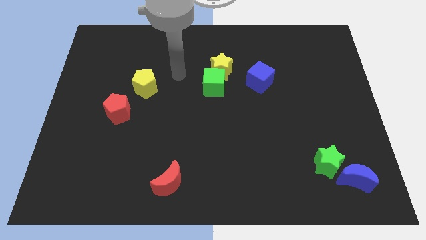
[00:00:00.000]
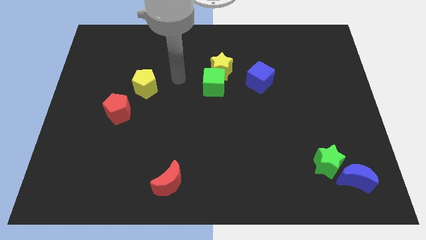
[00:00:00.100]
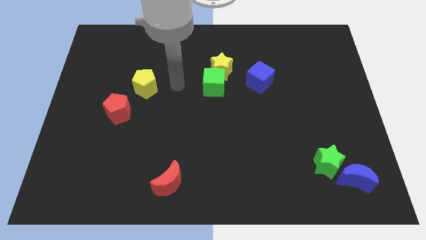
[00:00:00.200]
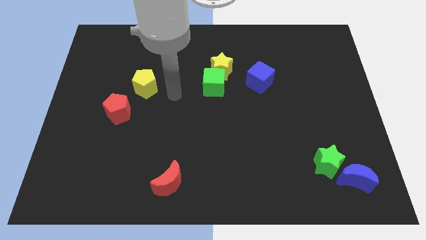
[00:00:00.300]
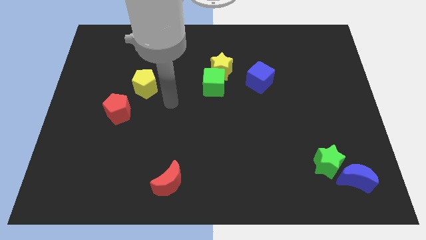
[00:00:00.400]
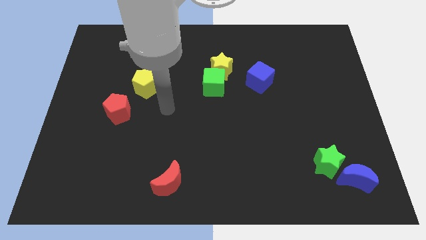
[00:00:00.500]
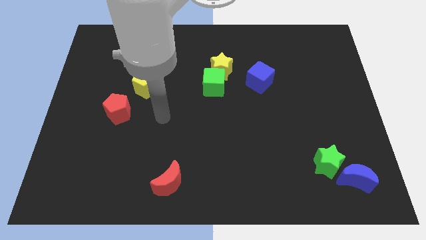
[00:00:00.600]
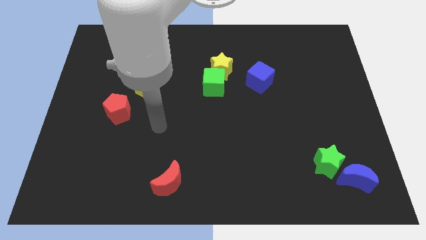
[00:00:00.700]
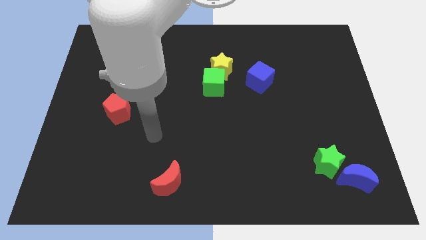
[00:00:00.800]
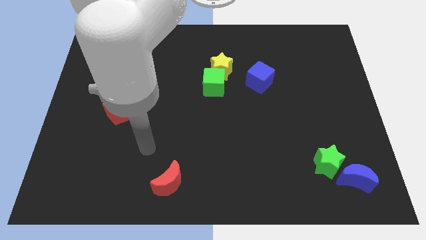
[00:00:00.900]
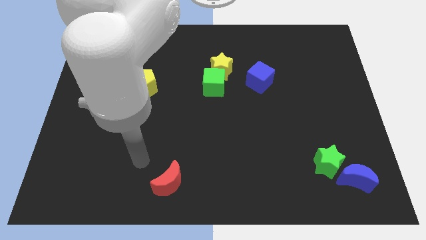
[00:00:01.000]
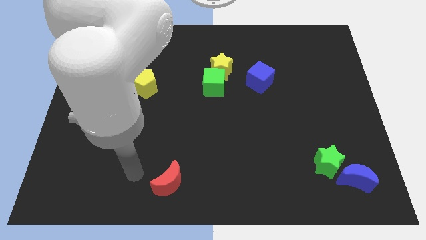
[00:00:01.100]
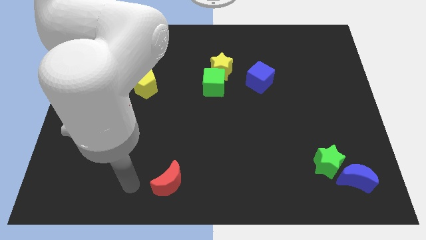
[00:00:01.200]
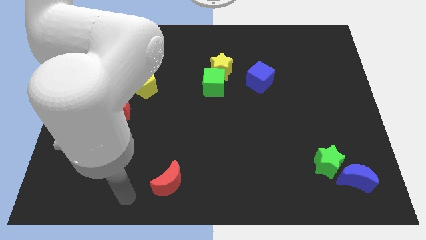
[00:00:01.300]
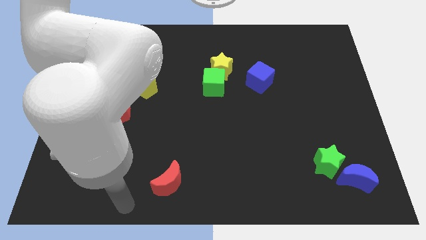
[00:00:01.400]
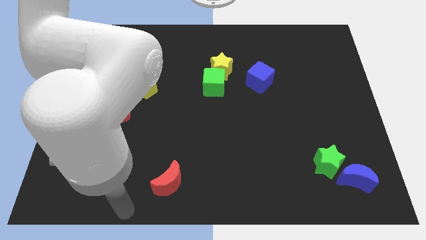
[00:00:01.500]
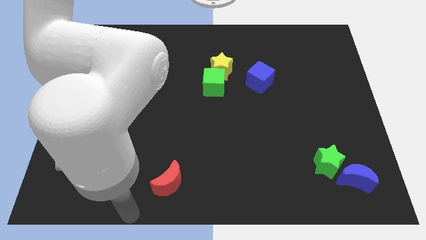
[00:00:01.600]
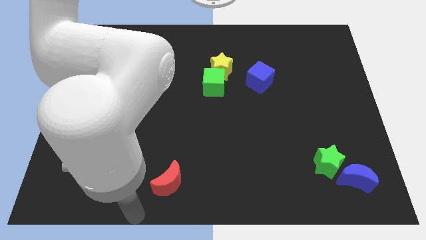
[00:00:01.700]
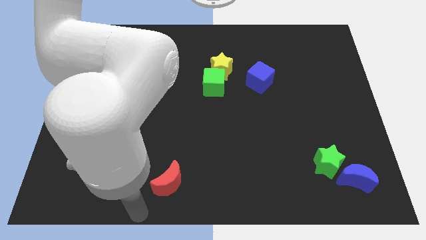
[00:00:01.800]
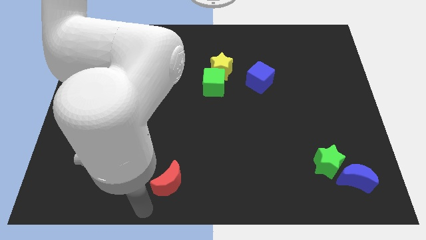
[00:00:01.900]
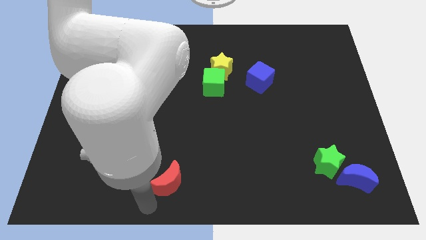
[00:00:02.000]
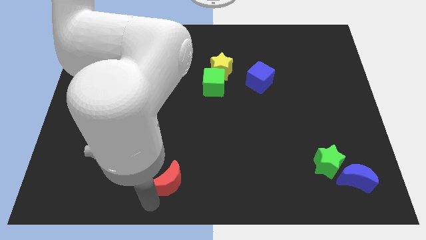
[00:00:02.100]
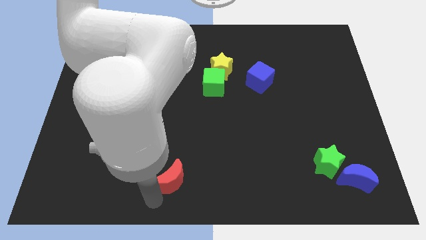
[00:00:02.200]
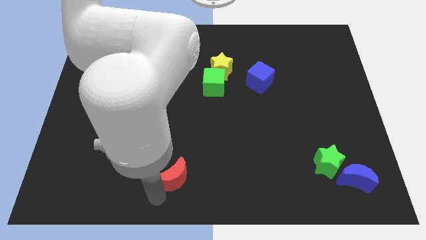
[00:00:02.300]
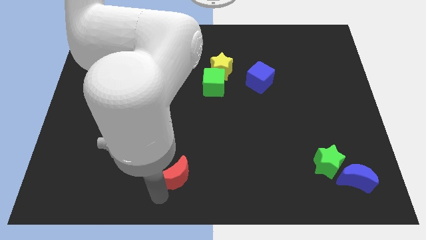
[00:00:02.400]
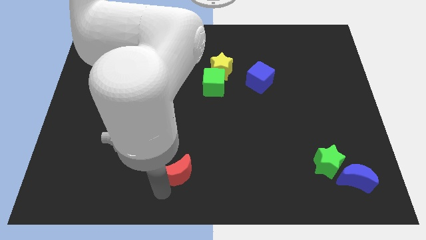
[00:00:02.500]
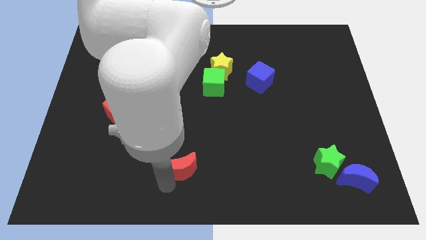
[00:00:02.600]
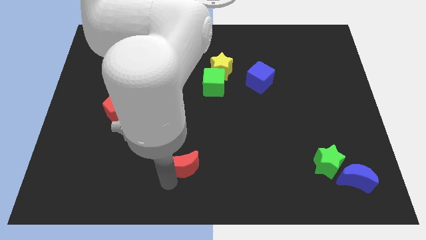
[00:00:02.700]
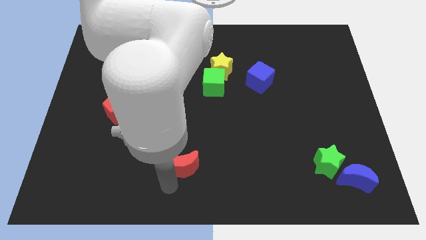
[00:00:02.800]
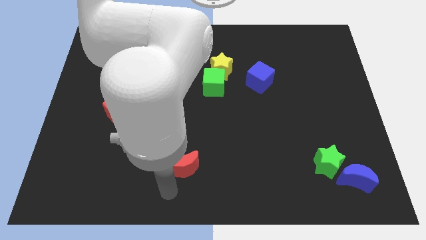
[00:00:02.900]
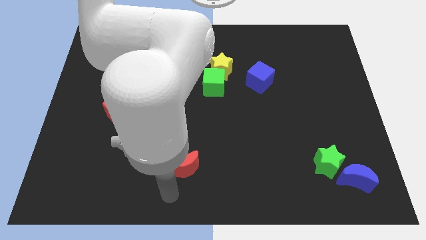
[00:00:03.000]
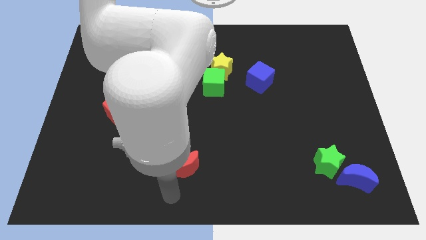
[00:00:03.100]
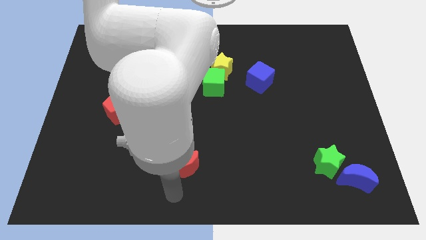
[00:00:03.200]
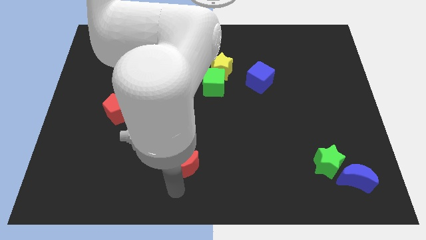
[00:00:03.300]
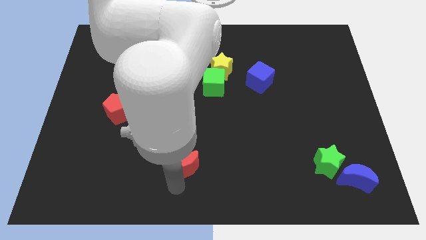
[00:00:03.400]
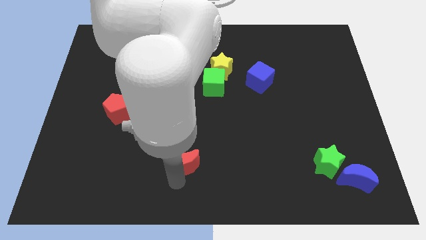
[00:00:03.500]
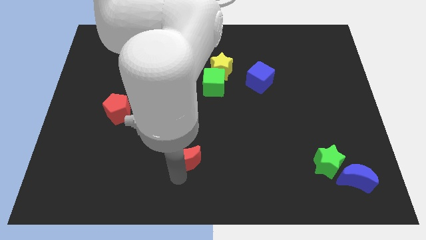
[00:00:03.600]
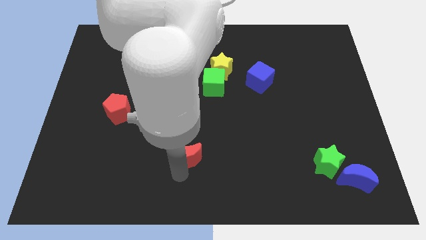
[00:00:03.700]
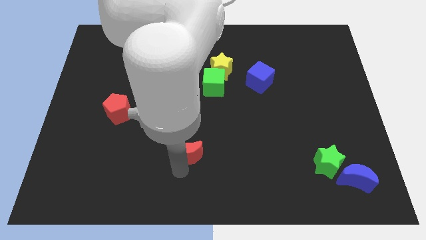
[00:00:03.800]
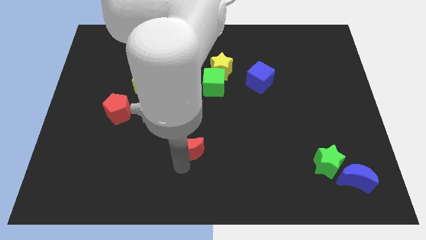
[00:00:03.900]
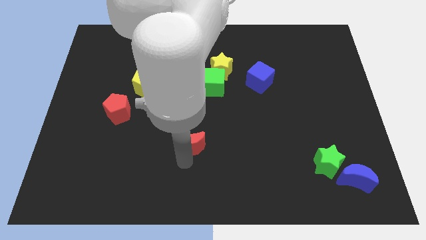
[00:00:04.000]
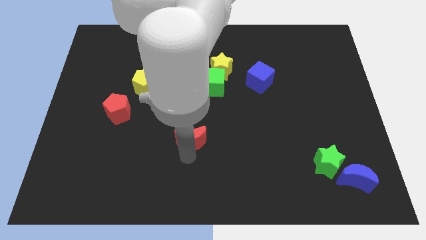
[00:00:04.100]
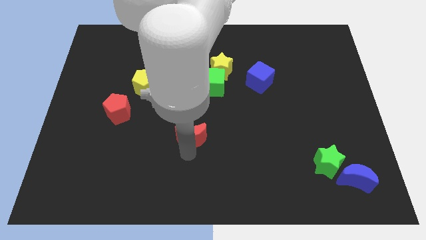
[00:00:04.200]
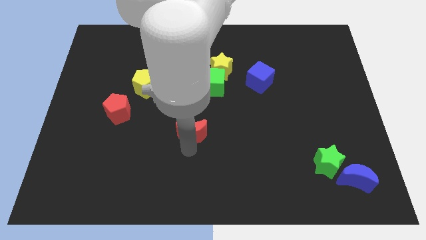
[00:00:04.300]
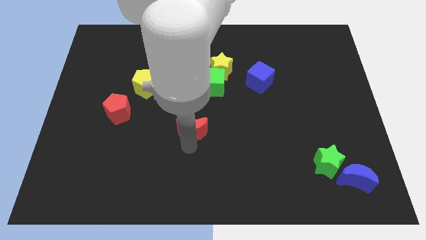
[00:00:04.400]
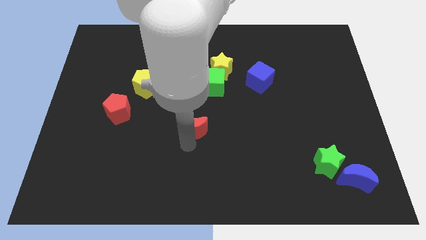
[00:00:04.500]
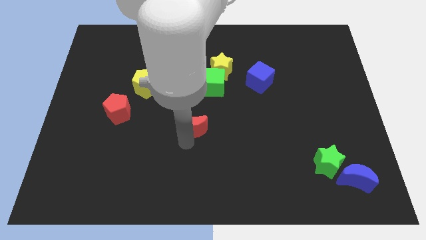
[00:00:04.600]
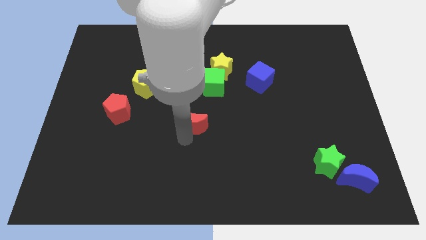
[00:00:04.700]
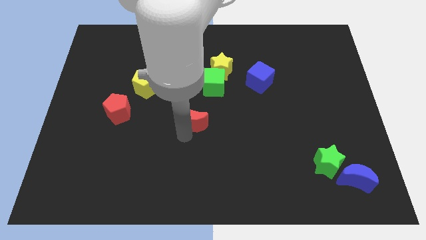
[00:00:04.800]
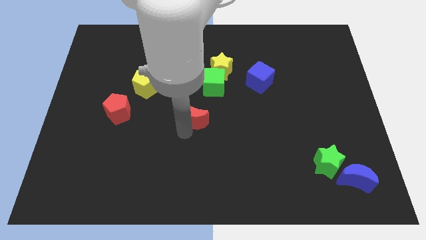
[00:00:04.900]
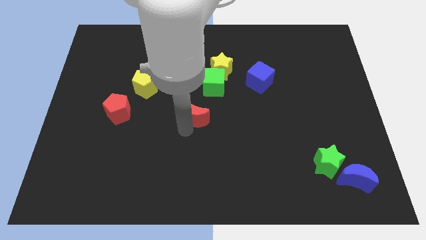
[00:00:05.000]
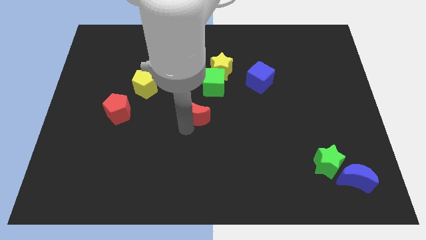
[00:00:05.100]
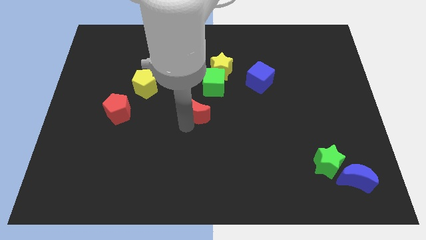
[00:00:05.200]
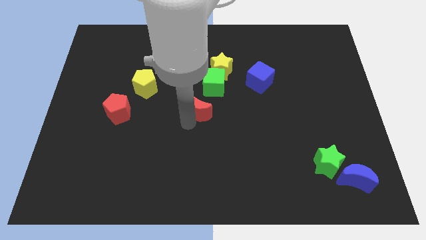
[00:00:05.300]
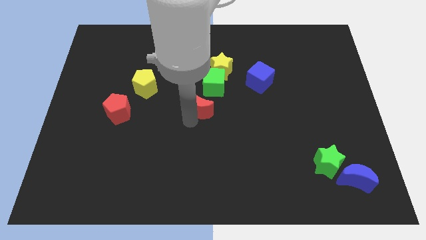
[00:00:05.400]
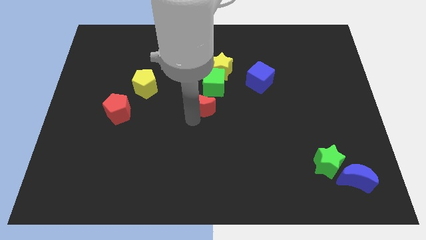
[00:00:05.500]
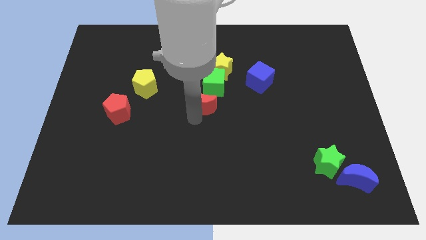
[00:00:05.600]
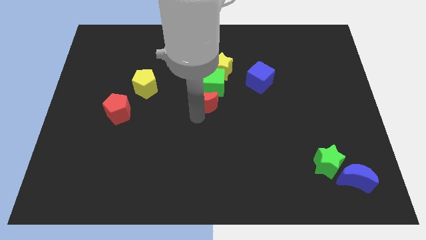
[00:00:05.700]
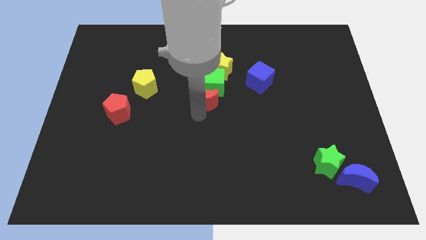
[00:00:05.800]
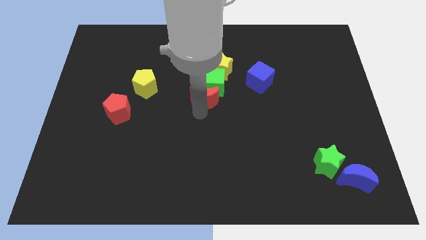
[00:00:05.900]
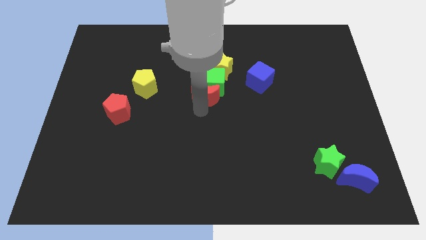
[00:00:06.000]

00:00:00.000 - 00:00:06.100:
put the red moon towards the green cube

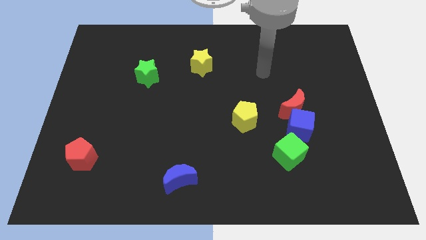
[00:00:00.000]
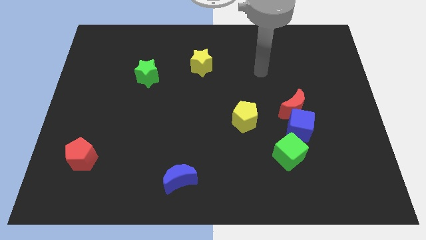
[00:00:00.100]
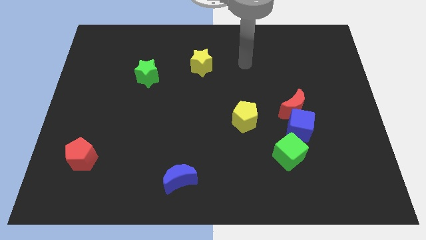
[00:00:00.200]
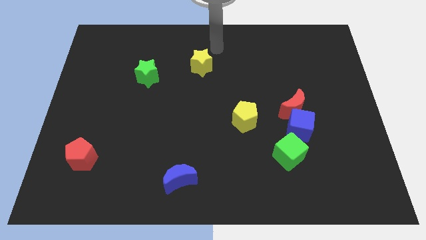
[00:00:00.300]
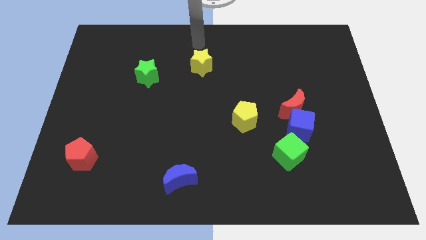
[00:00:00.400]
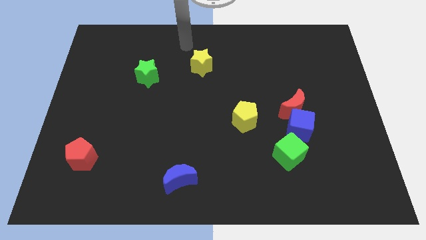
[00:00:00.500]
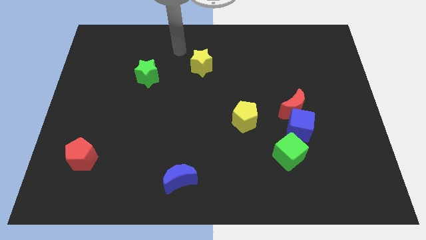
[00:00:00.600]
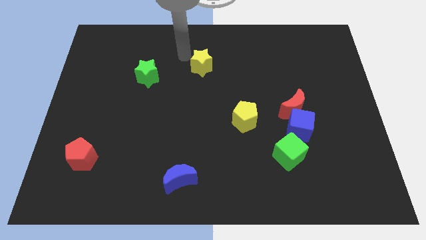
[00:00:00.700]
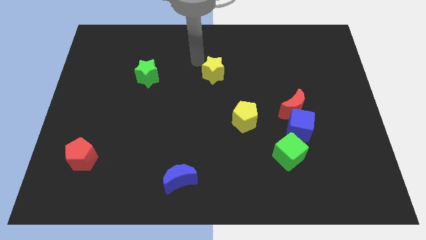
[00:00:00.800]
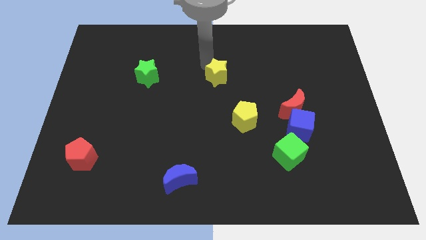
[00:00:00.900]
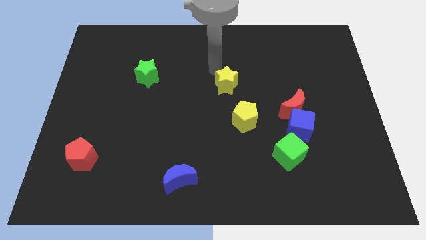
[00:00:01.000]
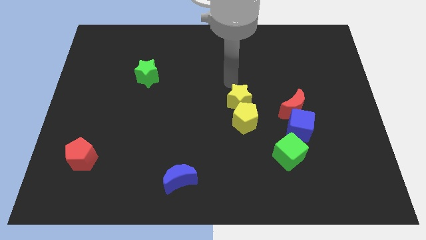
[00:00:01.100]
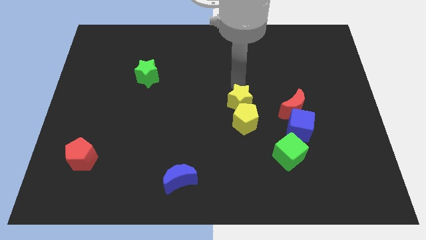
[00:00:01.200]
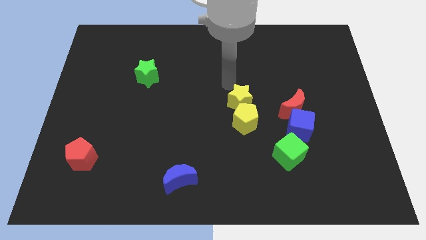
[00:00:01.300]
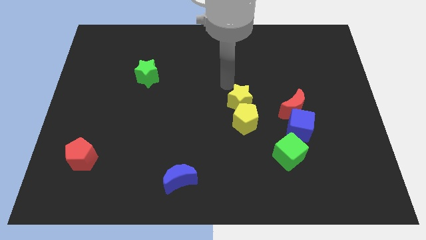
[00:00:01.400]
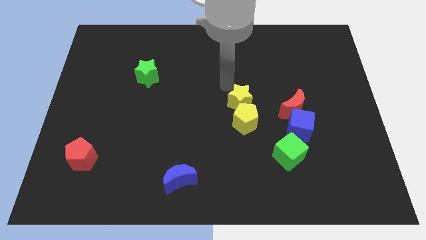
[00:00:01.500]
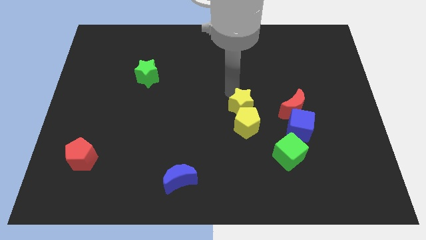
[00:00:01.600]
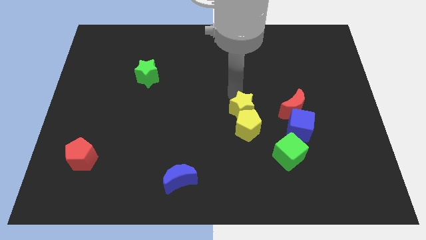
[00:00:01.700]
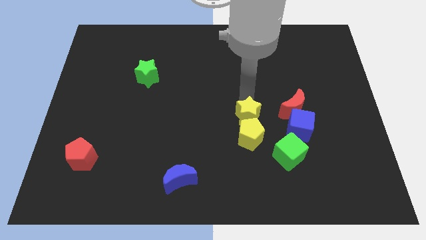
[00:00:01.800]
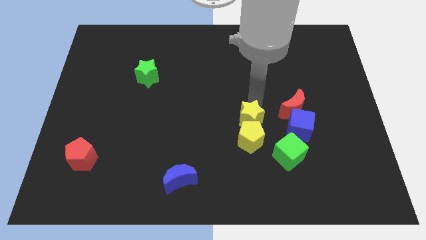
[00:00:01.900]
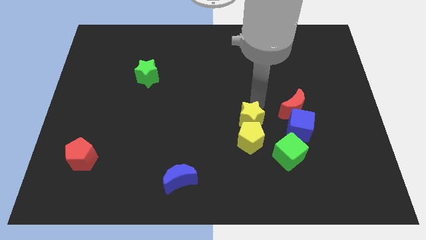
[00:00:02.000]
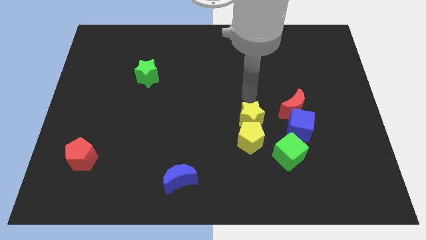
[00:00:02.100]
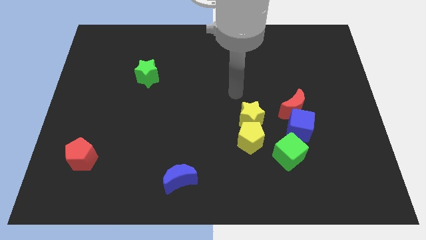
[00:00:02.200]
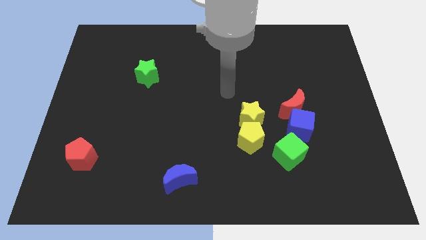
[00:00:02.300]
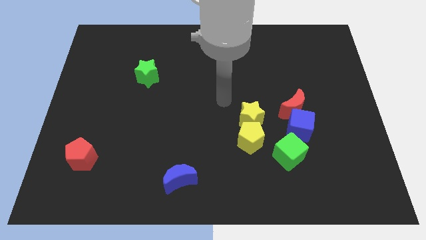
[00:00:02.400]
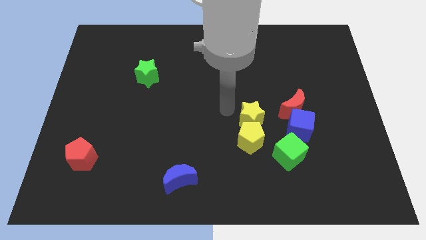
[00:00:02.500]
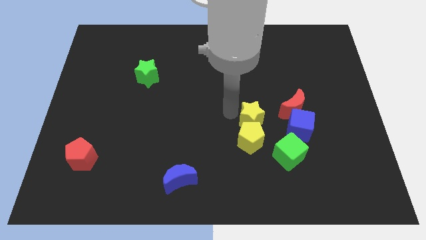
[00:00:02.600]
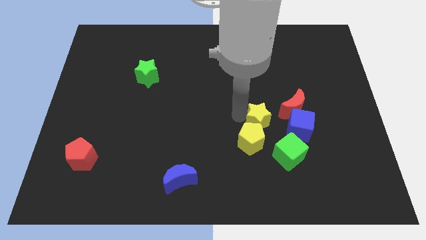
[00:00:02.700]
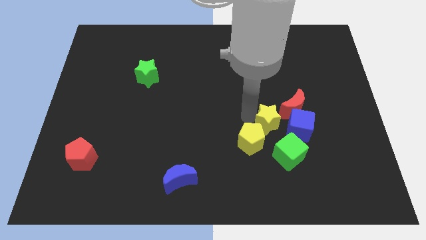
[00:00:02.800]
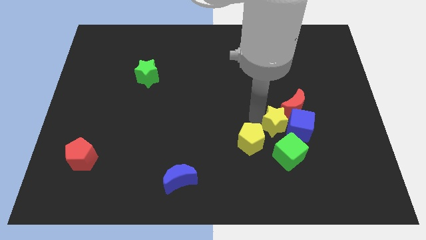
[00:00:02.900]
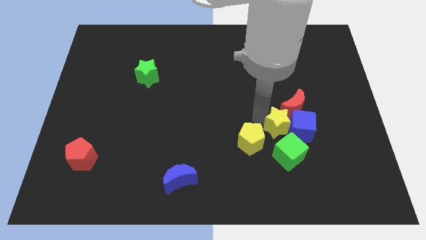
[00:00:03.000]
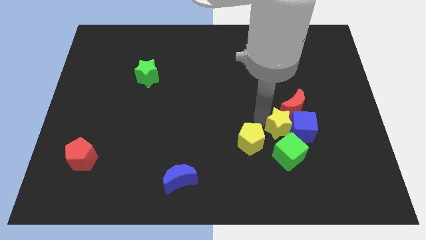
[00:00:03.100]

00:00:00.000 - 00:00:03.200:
move the yellow star next to the blue cube
